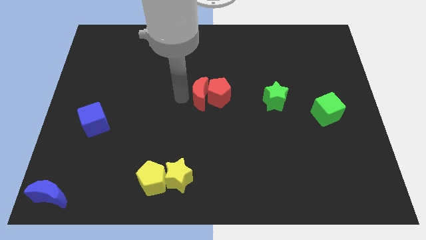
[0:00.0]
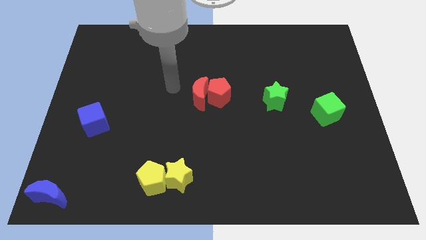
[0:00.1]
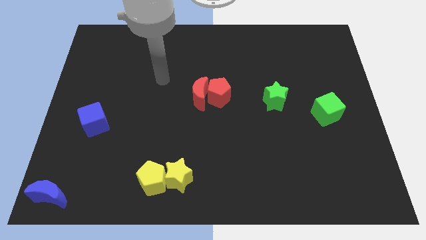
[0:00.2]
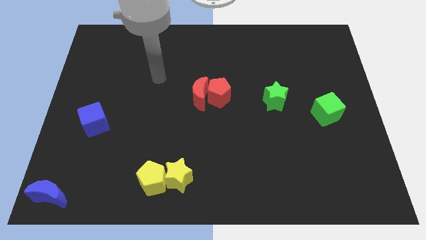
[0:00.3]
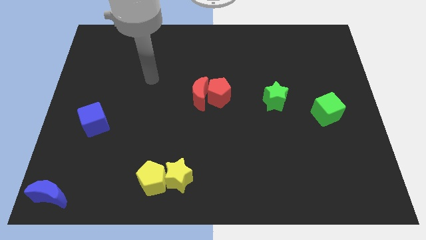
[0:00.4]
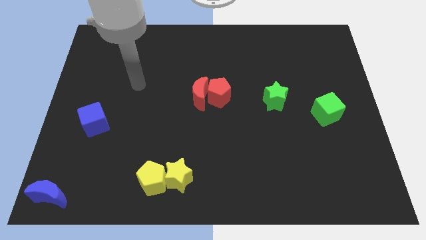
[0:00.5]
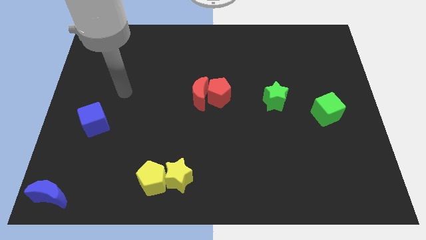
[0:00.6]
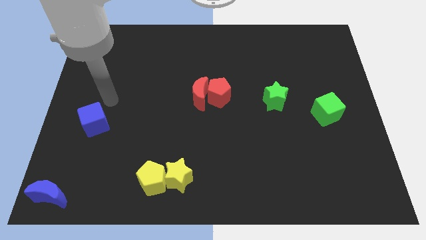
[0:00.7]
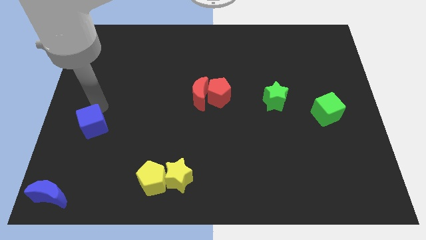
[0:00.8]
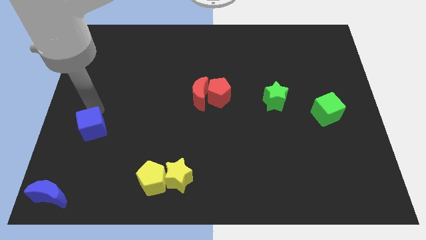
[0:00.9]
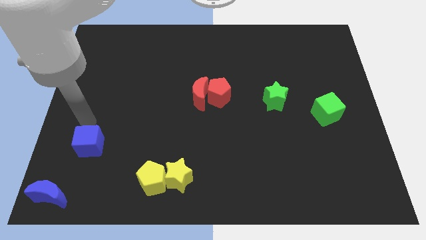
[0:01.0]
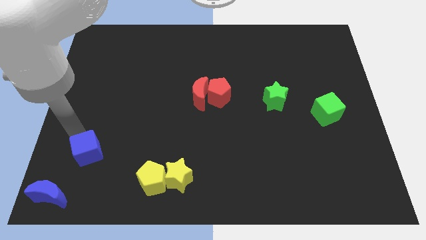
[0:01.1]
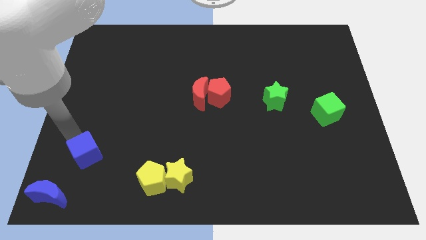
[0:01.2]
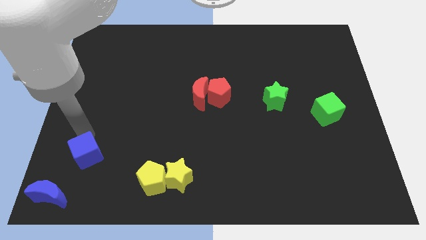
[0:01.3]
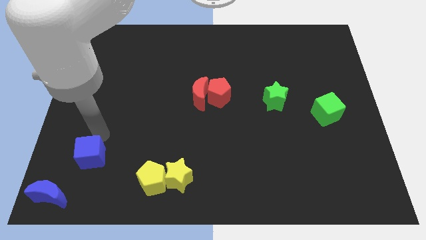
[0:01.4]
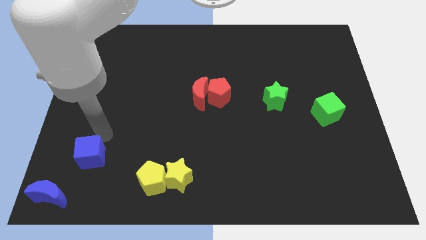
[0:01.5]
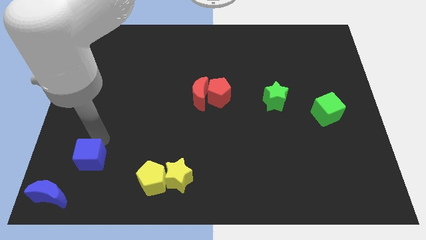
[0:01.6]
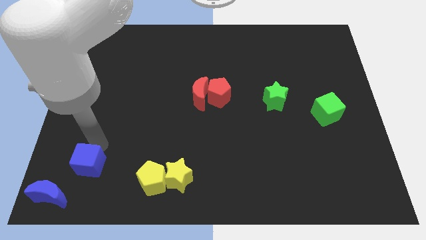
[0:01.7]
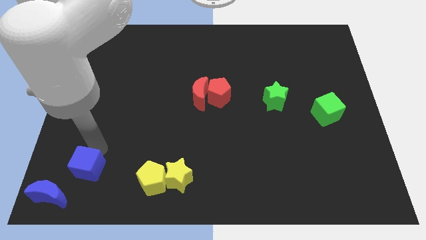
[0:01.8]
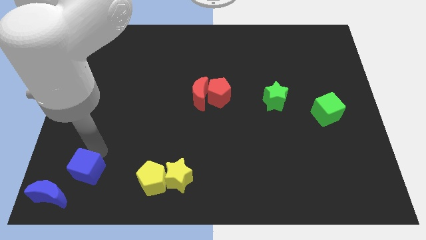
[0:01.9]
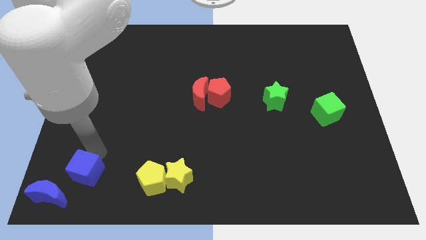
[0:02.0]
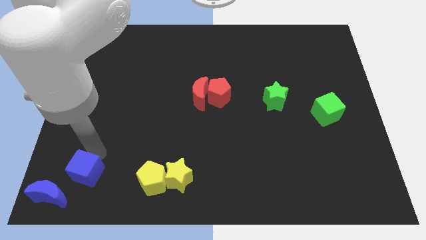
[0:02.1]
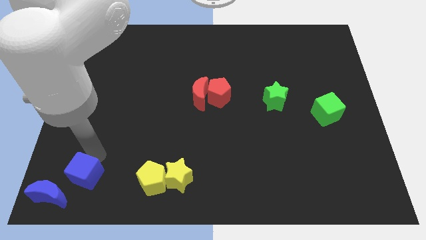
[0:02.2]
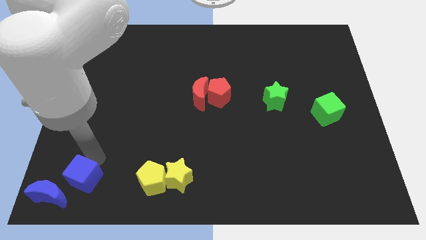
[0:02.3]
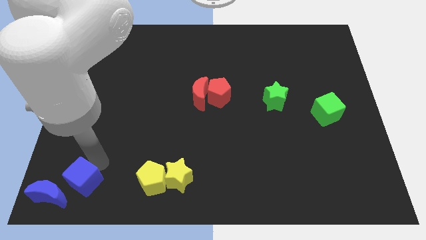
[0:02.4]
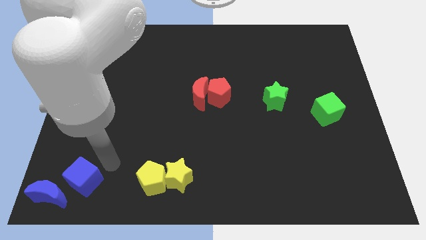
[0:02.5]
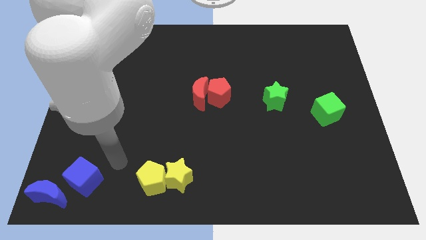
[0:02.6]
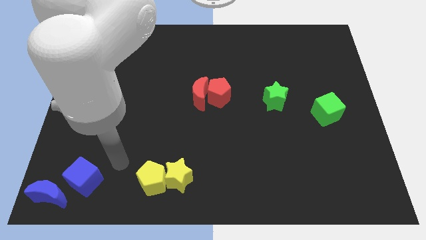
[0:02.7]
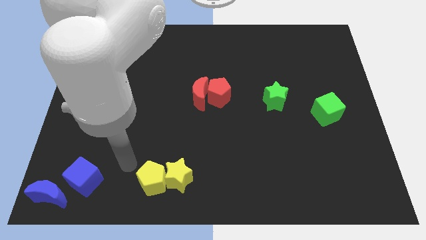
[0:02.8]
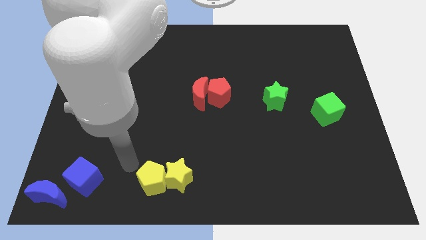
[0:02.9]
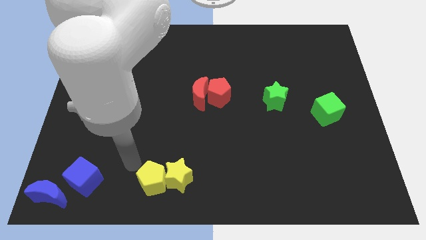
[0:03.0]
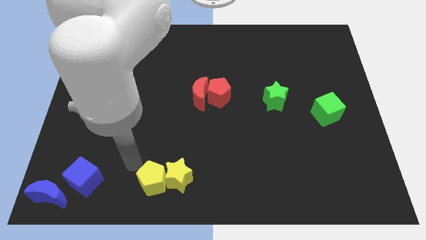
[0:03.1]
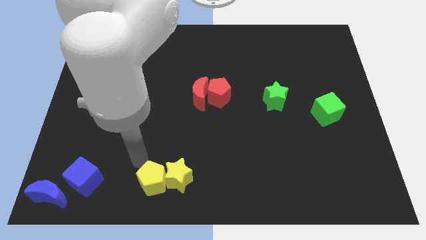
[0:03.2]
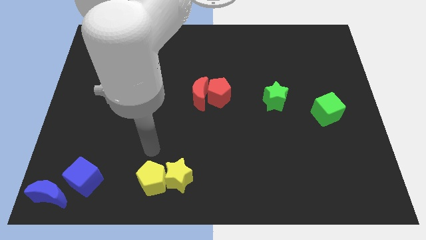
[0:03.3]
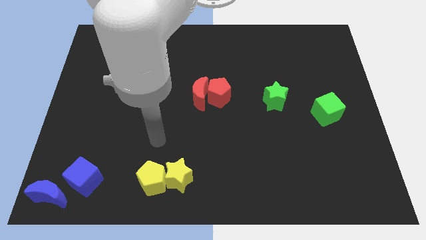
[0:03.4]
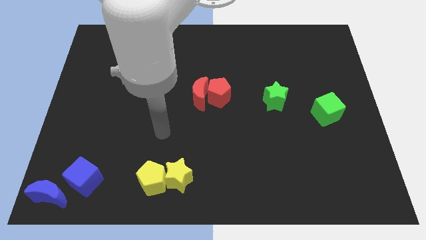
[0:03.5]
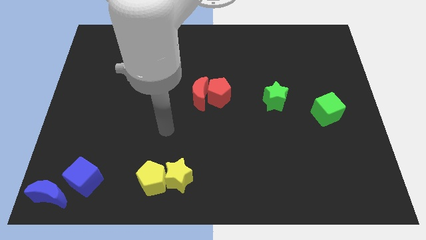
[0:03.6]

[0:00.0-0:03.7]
move blue cube left of yellow pentagon

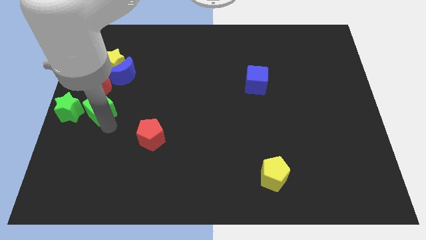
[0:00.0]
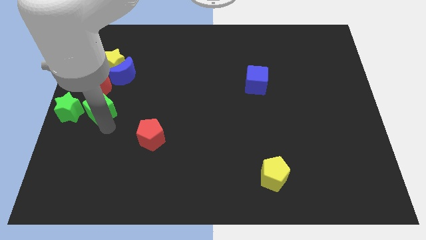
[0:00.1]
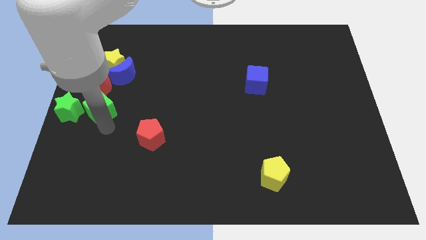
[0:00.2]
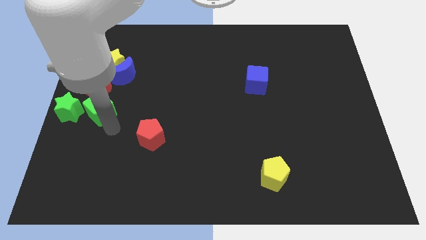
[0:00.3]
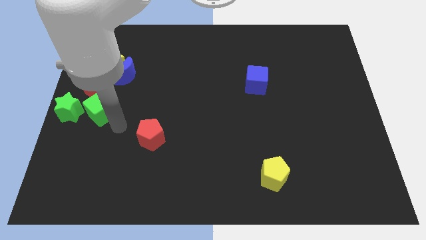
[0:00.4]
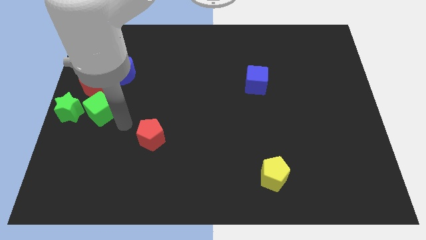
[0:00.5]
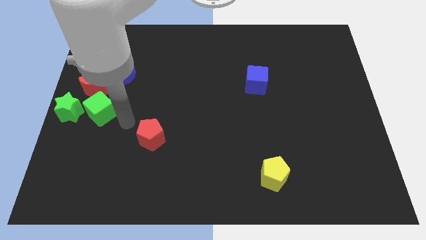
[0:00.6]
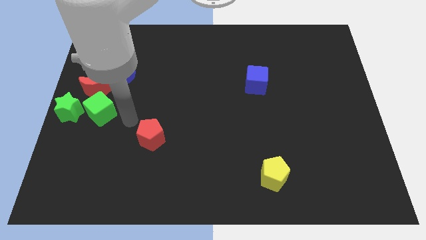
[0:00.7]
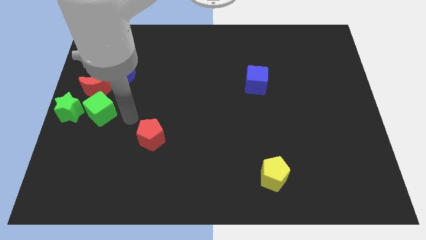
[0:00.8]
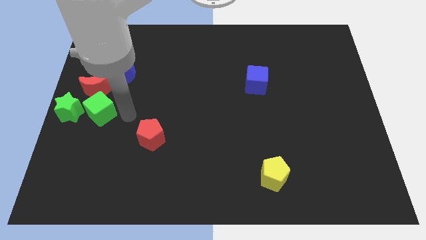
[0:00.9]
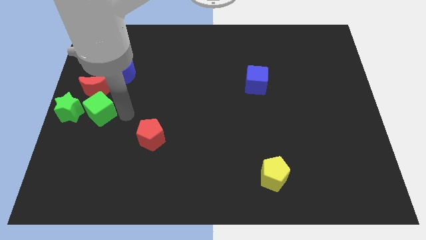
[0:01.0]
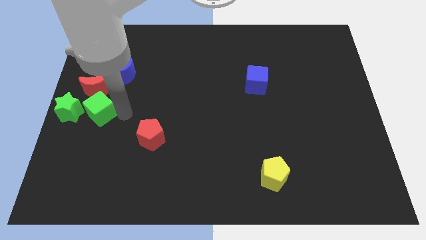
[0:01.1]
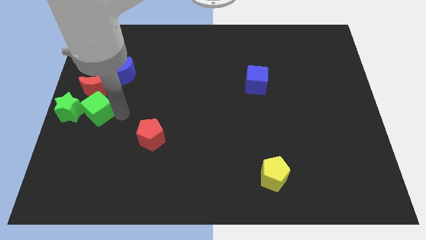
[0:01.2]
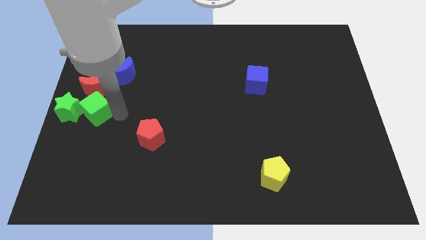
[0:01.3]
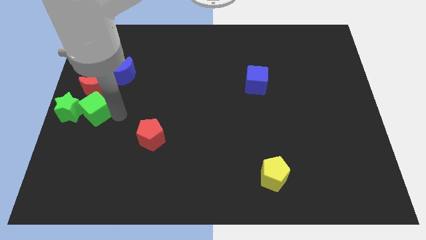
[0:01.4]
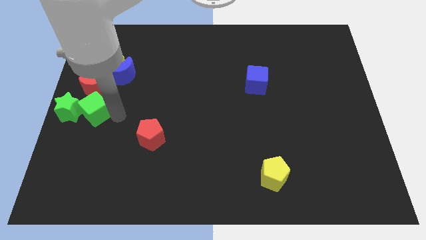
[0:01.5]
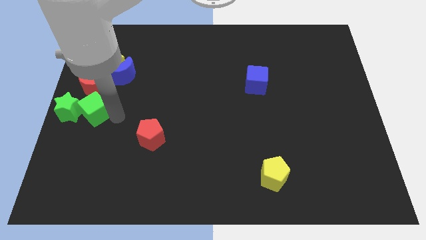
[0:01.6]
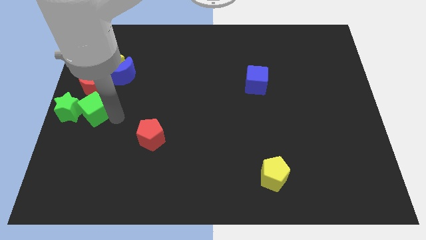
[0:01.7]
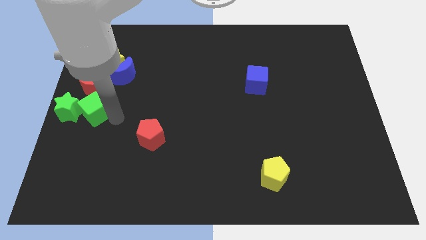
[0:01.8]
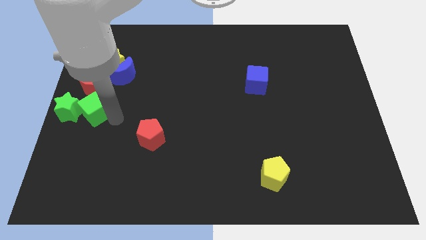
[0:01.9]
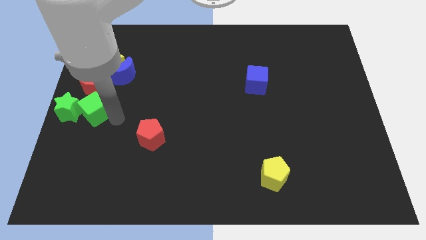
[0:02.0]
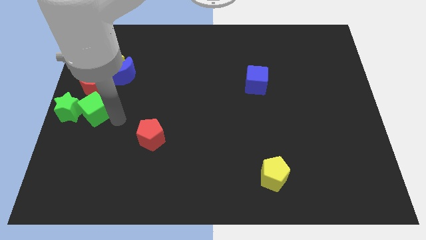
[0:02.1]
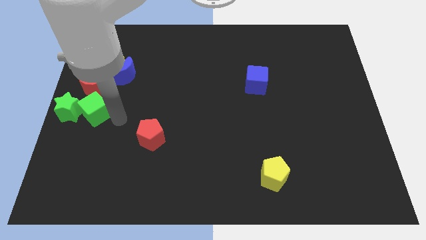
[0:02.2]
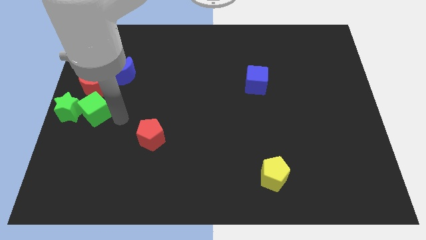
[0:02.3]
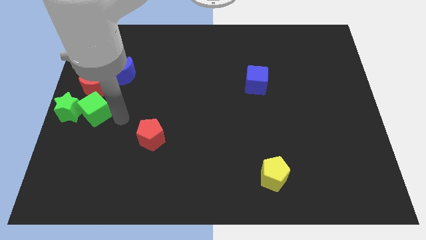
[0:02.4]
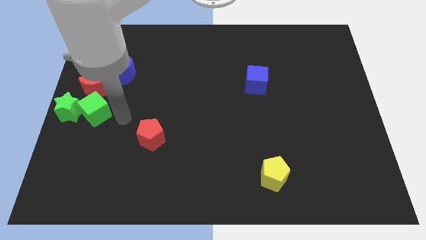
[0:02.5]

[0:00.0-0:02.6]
move the green cube into the right side of the green star

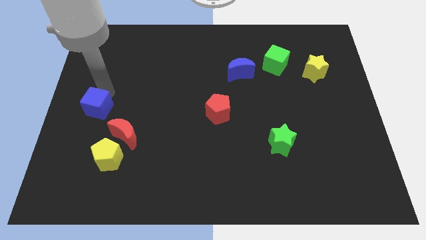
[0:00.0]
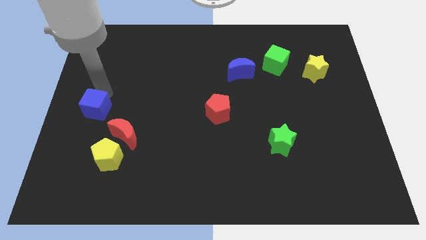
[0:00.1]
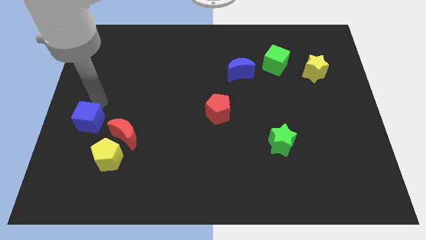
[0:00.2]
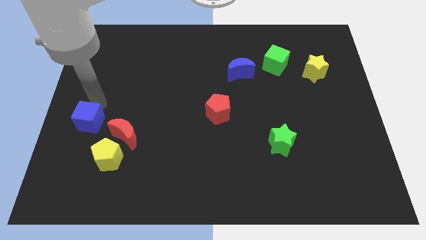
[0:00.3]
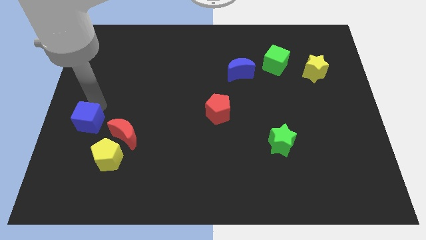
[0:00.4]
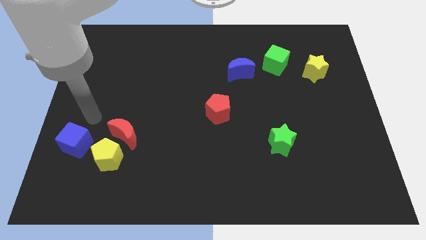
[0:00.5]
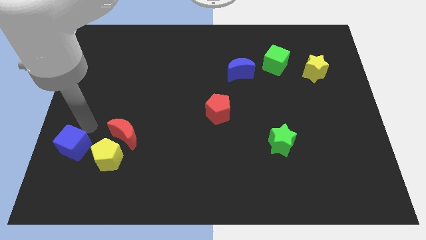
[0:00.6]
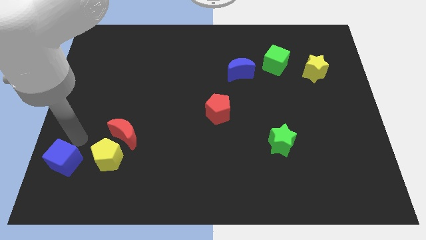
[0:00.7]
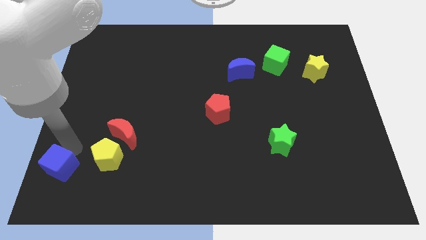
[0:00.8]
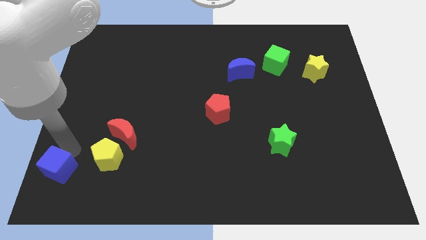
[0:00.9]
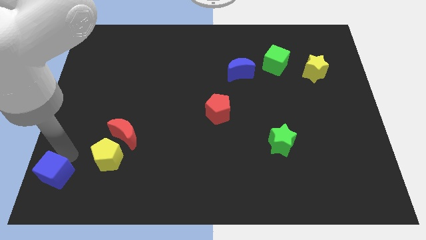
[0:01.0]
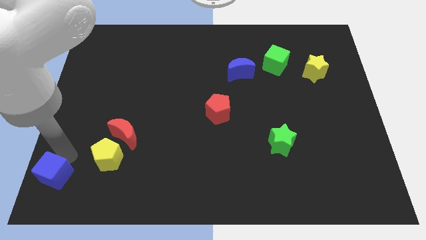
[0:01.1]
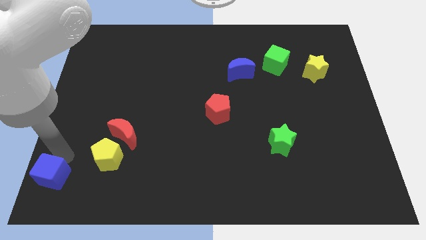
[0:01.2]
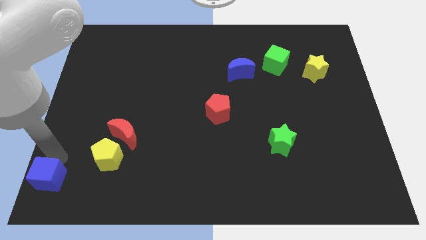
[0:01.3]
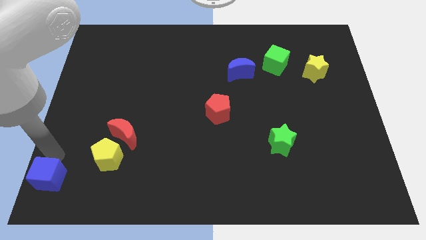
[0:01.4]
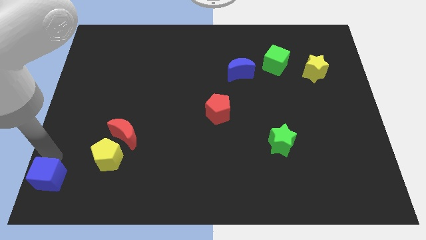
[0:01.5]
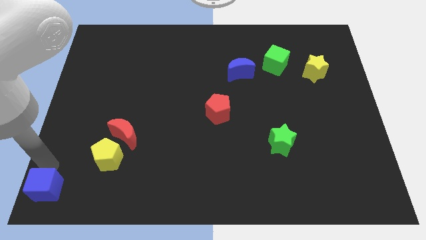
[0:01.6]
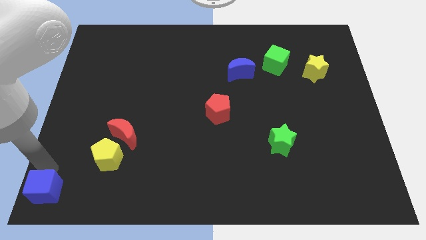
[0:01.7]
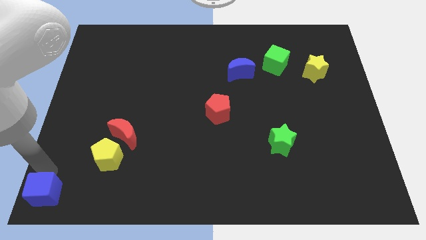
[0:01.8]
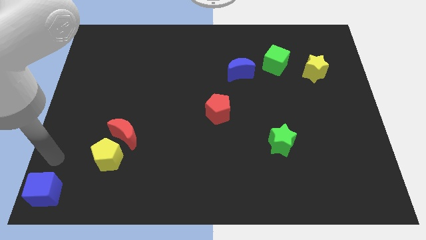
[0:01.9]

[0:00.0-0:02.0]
push the blue cube towards the bottom left corner of the board

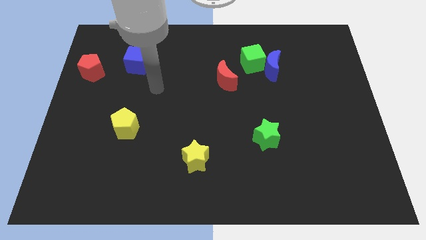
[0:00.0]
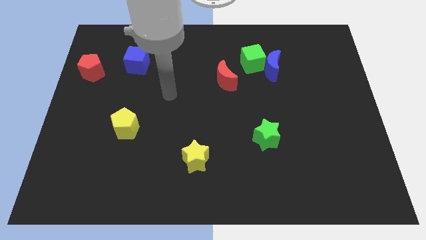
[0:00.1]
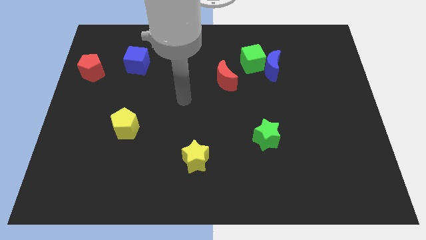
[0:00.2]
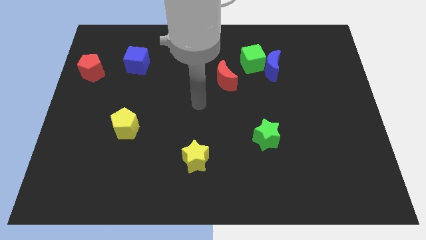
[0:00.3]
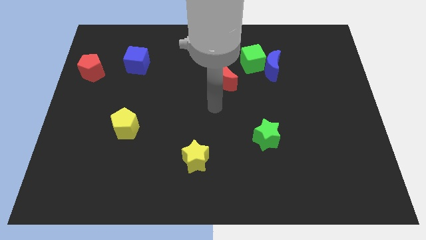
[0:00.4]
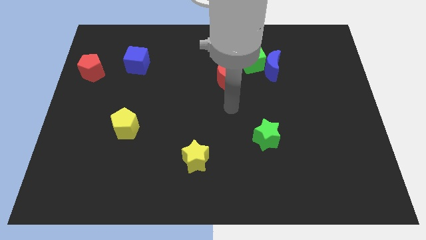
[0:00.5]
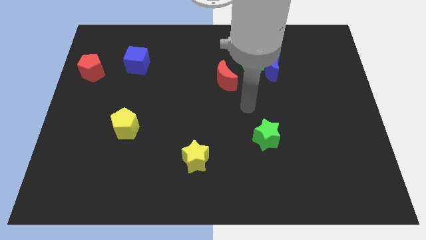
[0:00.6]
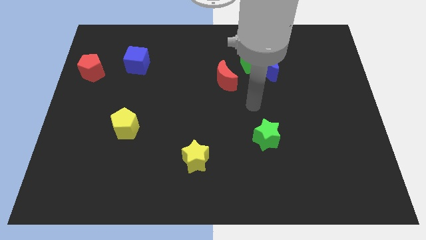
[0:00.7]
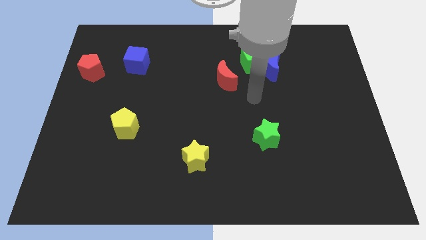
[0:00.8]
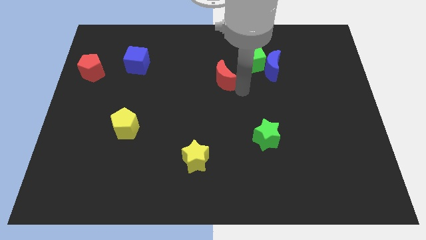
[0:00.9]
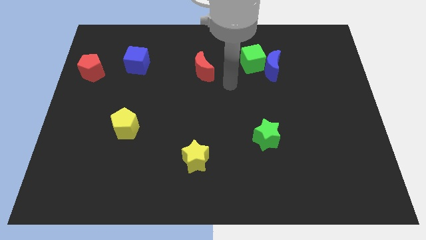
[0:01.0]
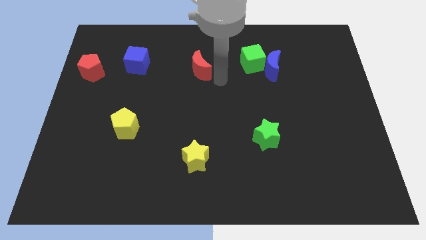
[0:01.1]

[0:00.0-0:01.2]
put the red moon parallel left to the green cube
